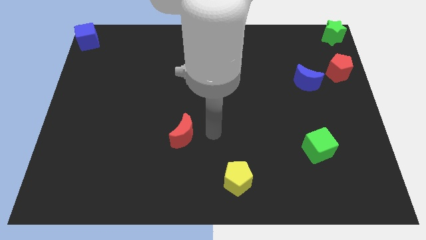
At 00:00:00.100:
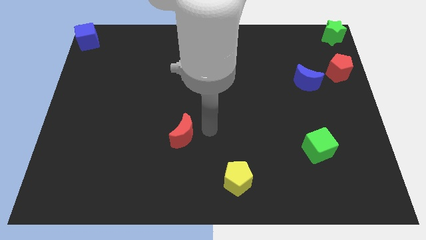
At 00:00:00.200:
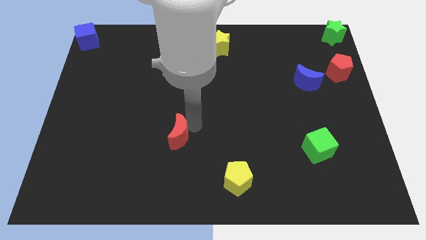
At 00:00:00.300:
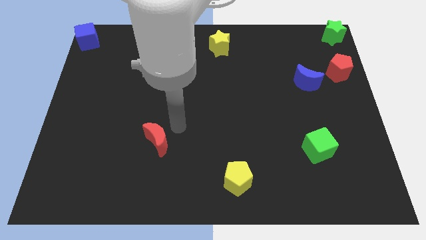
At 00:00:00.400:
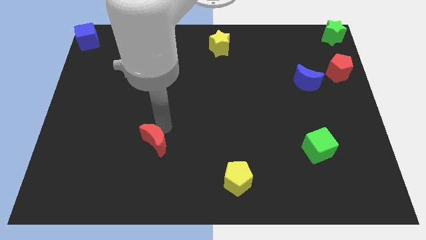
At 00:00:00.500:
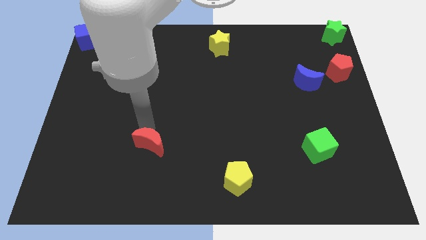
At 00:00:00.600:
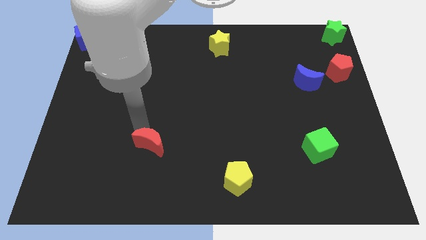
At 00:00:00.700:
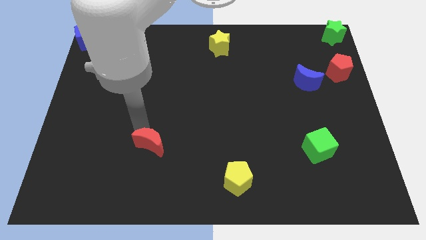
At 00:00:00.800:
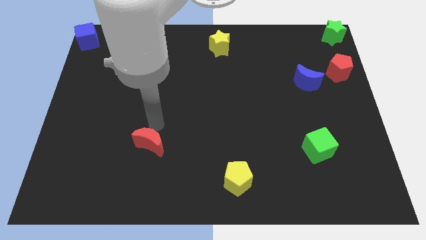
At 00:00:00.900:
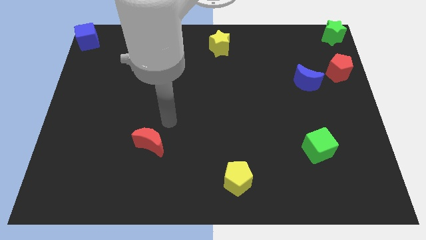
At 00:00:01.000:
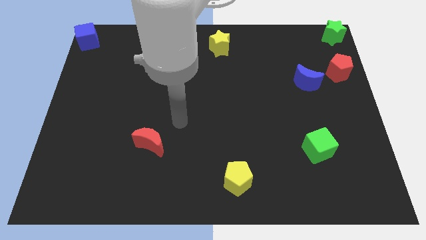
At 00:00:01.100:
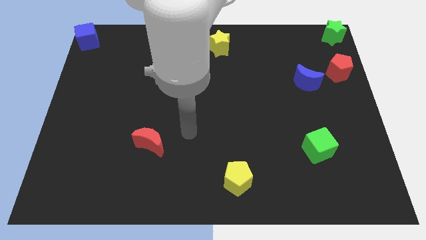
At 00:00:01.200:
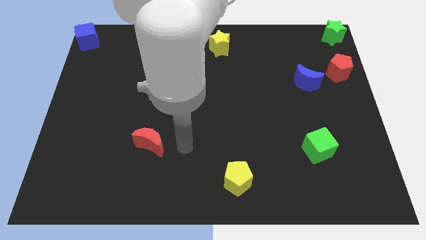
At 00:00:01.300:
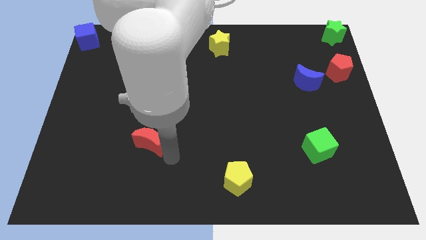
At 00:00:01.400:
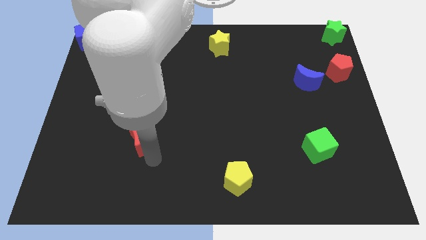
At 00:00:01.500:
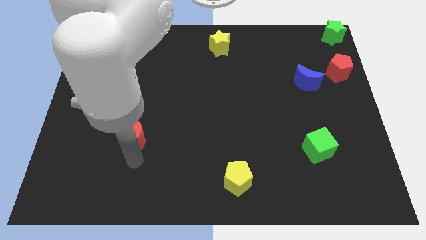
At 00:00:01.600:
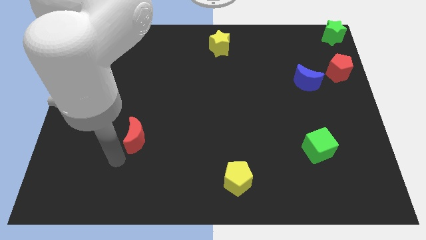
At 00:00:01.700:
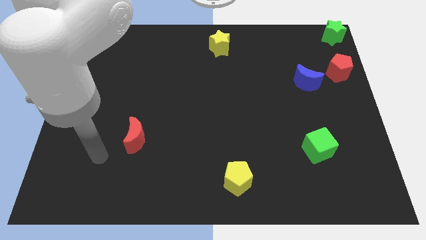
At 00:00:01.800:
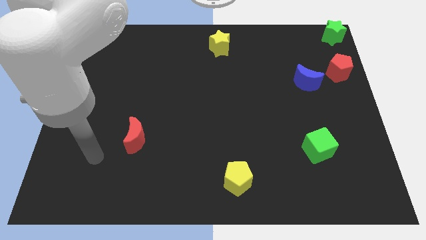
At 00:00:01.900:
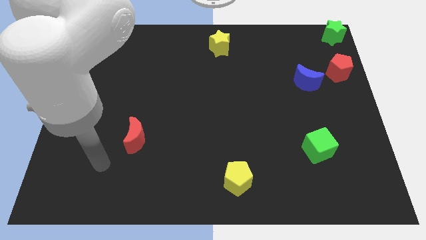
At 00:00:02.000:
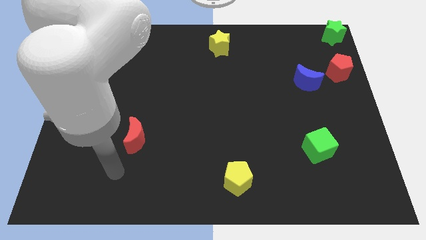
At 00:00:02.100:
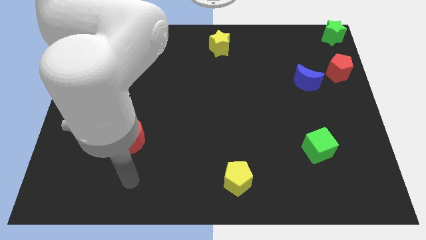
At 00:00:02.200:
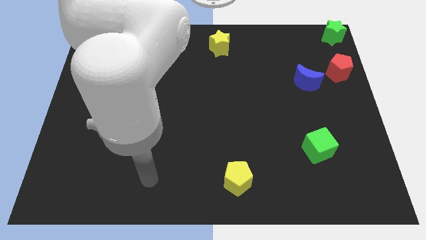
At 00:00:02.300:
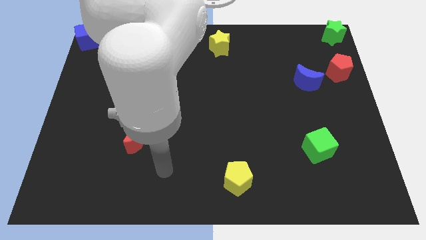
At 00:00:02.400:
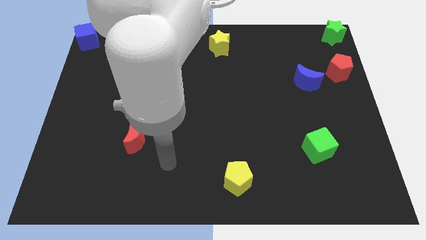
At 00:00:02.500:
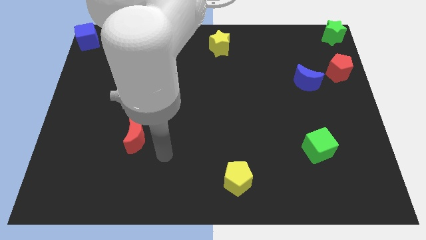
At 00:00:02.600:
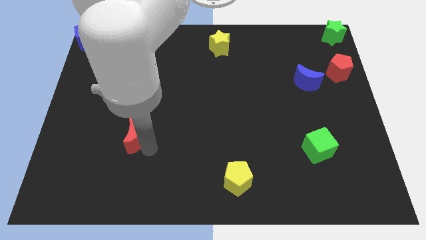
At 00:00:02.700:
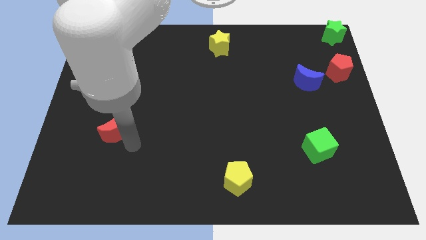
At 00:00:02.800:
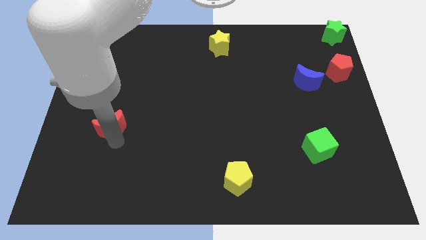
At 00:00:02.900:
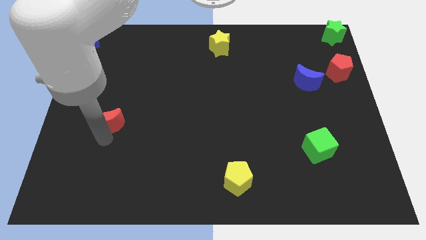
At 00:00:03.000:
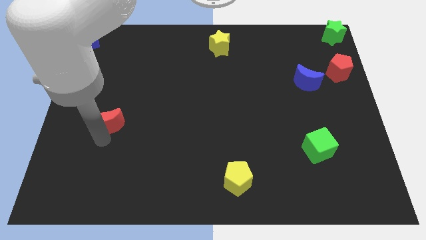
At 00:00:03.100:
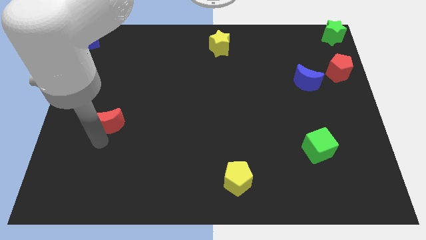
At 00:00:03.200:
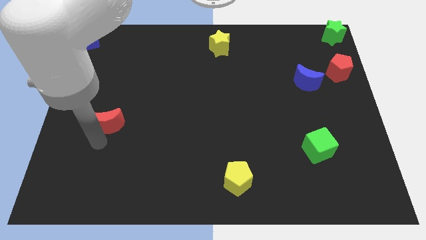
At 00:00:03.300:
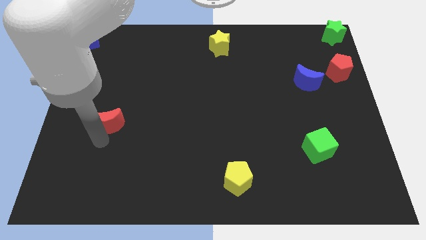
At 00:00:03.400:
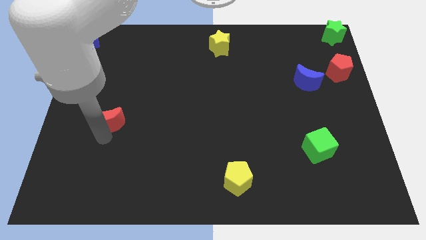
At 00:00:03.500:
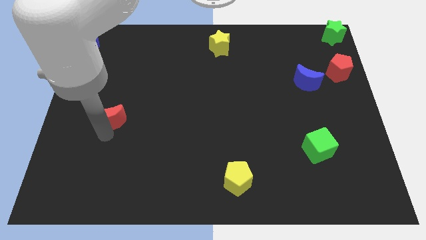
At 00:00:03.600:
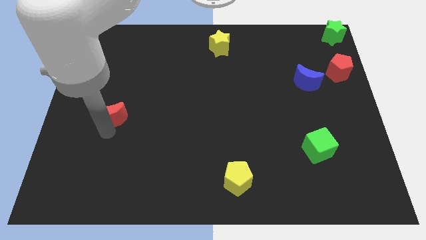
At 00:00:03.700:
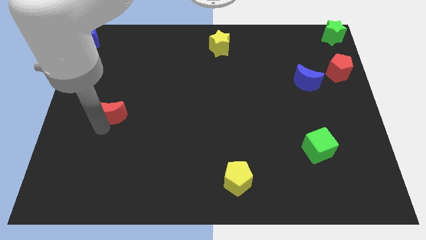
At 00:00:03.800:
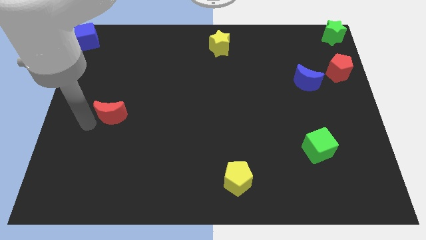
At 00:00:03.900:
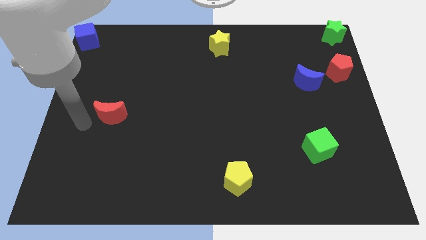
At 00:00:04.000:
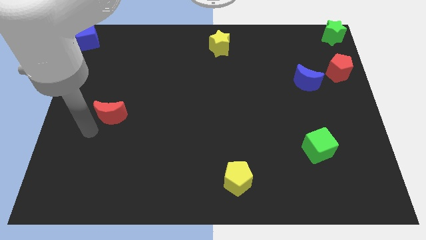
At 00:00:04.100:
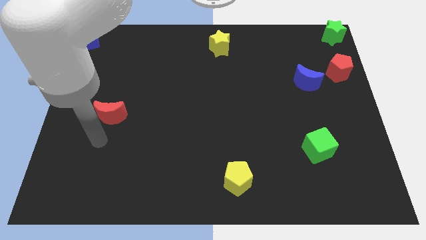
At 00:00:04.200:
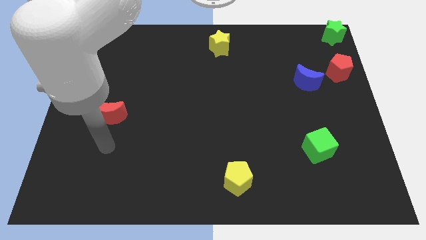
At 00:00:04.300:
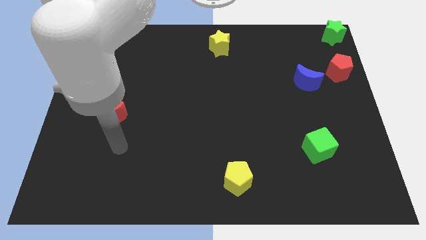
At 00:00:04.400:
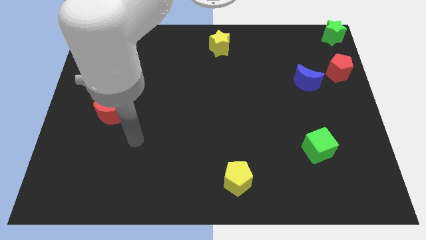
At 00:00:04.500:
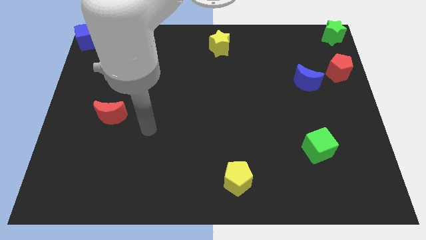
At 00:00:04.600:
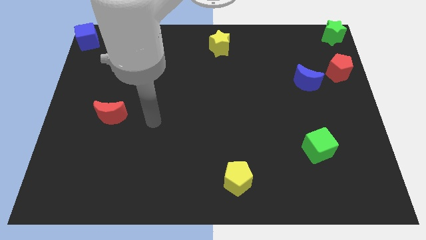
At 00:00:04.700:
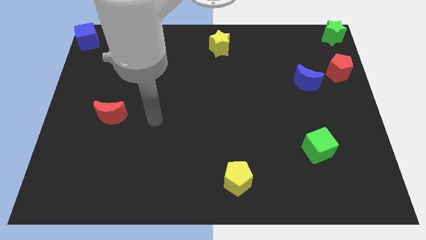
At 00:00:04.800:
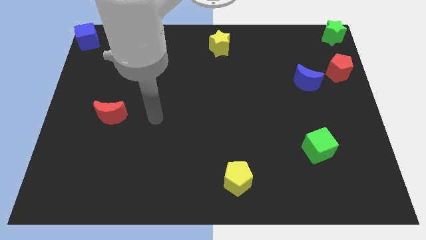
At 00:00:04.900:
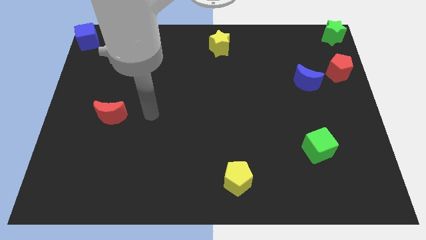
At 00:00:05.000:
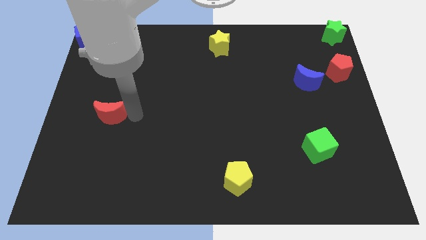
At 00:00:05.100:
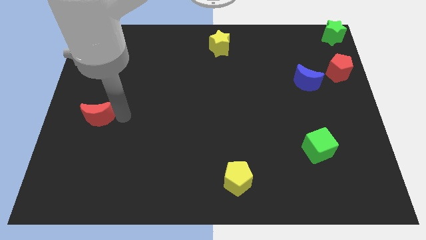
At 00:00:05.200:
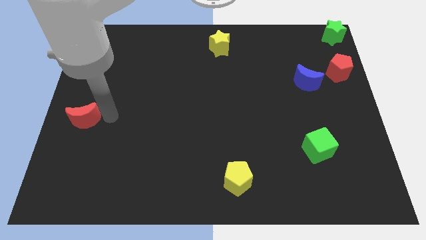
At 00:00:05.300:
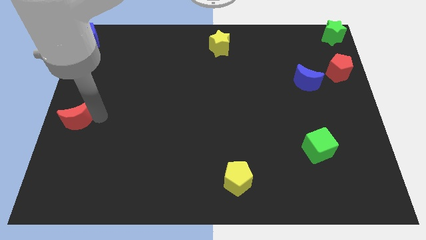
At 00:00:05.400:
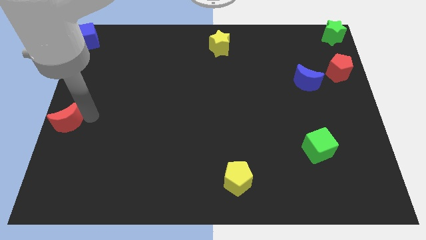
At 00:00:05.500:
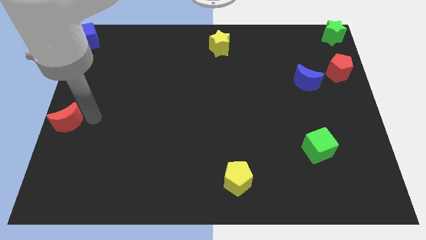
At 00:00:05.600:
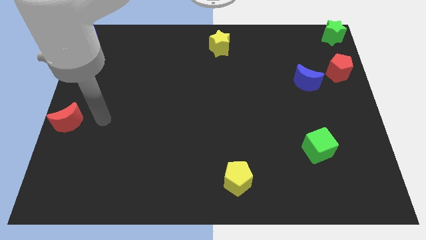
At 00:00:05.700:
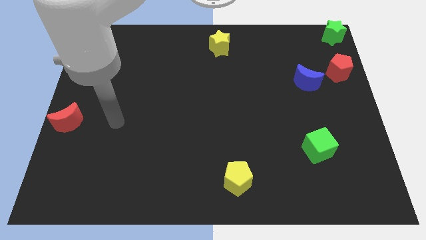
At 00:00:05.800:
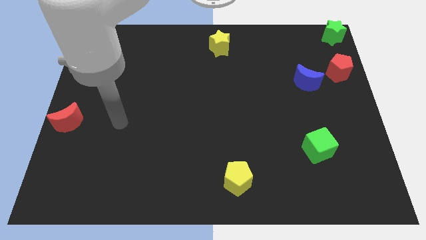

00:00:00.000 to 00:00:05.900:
place the red moon to the left center of the board

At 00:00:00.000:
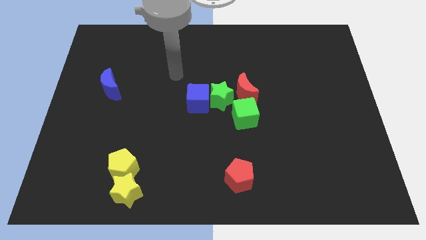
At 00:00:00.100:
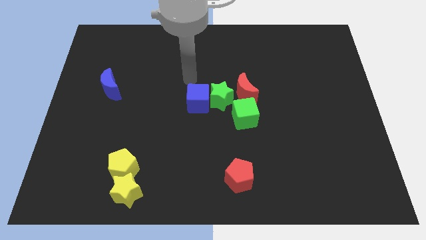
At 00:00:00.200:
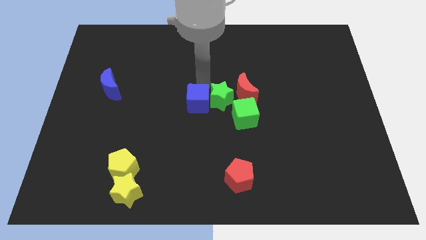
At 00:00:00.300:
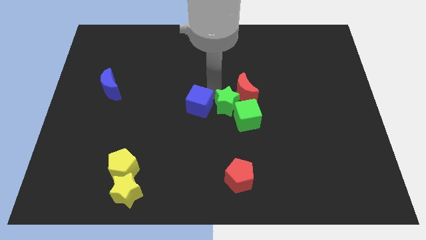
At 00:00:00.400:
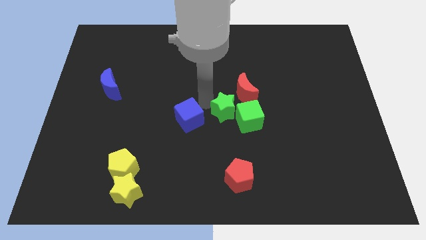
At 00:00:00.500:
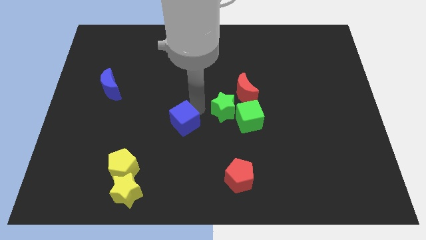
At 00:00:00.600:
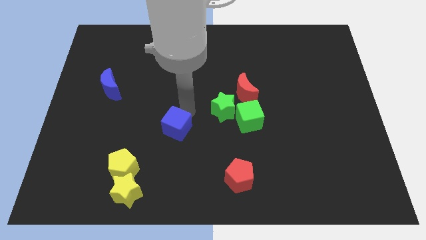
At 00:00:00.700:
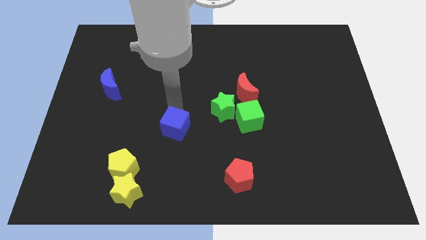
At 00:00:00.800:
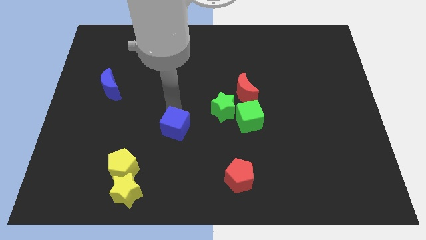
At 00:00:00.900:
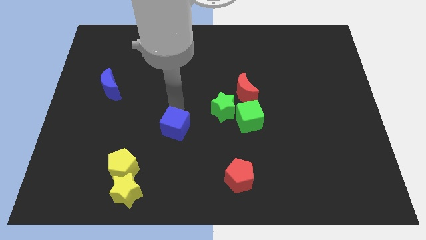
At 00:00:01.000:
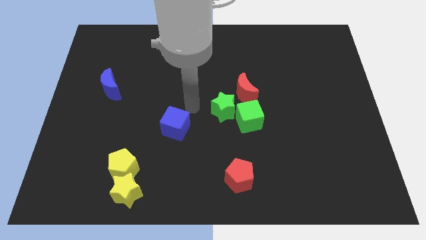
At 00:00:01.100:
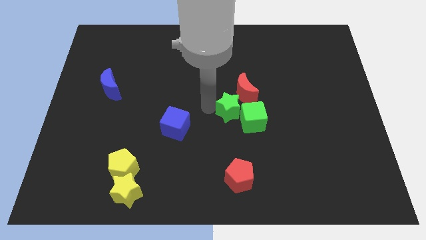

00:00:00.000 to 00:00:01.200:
separate the blue cube from the green star

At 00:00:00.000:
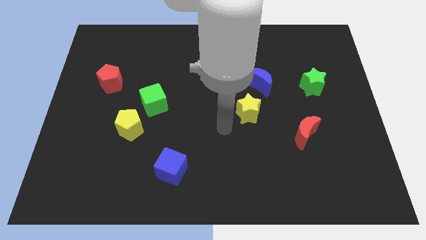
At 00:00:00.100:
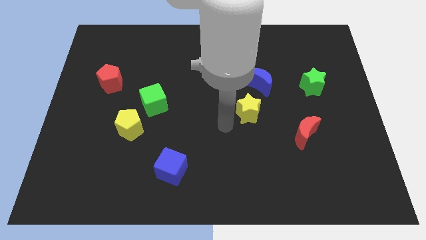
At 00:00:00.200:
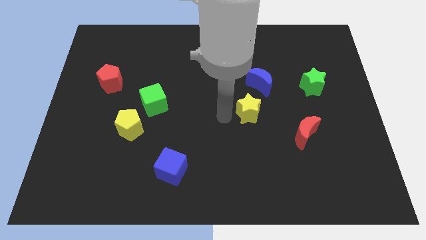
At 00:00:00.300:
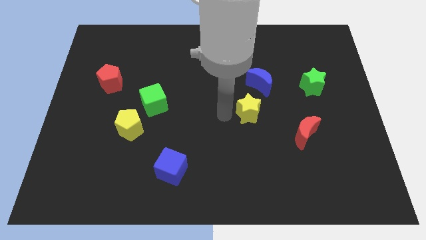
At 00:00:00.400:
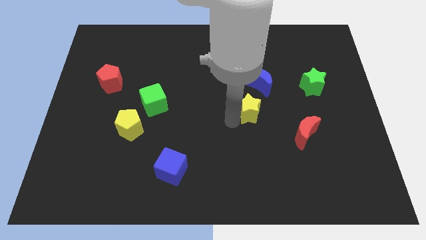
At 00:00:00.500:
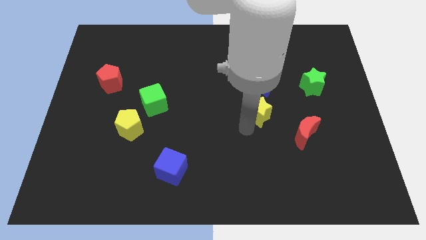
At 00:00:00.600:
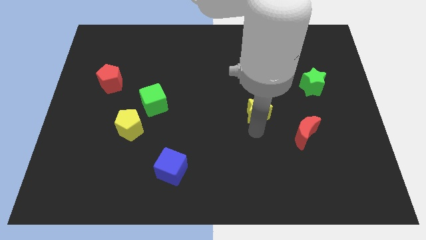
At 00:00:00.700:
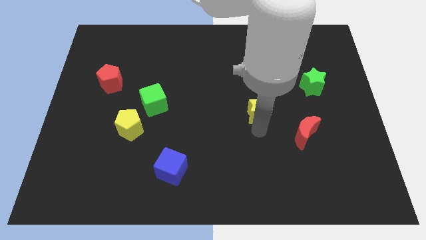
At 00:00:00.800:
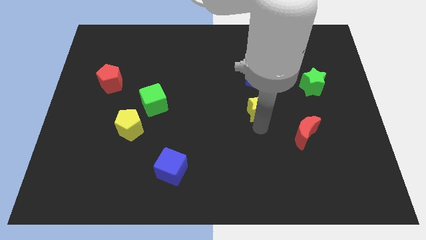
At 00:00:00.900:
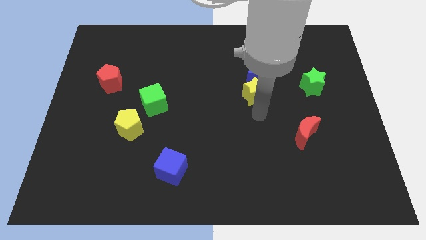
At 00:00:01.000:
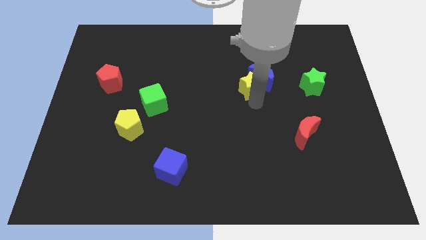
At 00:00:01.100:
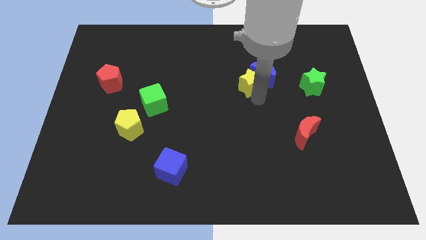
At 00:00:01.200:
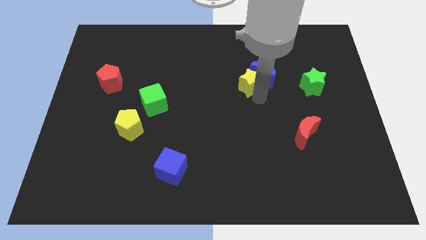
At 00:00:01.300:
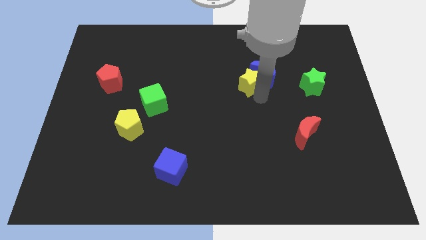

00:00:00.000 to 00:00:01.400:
push yellow star near blue crescent

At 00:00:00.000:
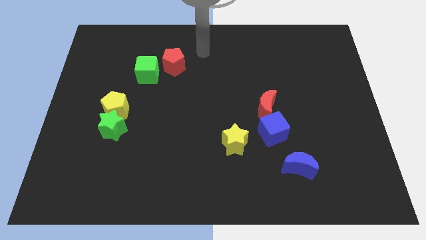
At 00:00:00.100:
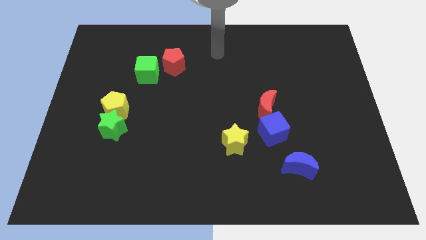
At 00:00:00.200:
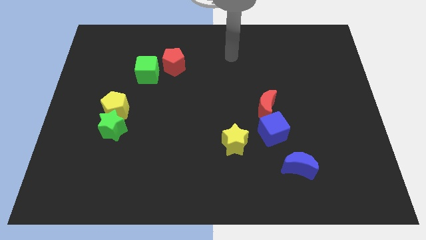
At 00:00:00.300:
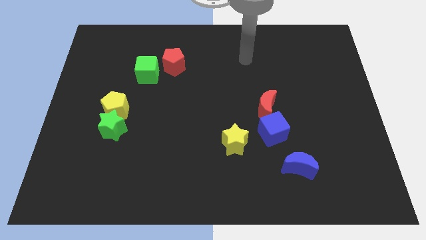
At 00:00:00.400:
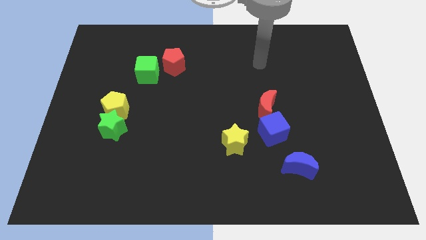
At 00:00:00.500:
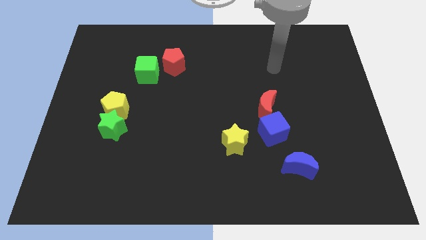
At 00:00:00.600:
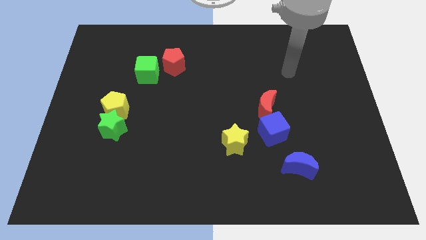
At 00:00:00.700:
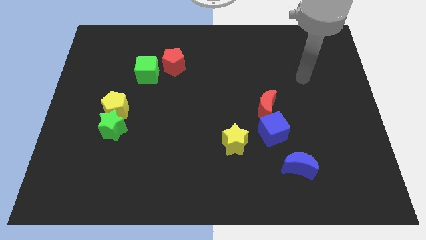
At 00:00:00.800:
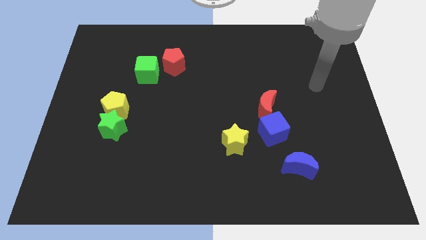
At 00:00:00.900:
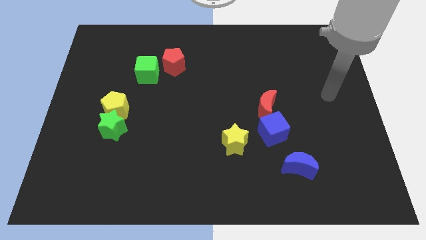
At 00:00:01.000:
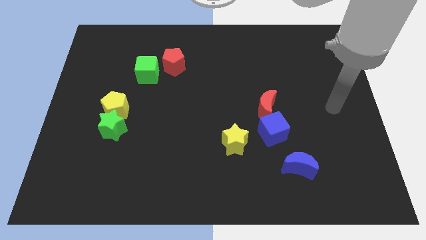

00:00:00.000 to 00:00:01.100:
place your arm at the center right
